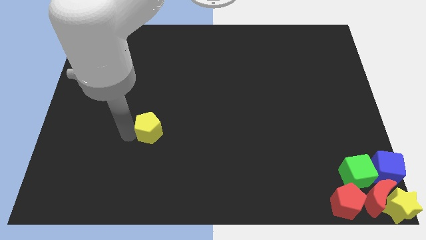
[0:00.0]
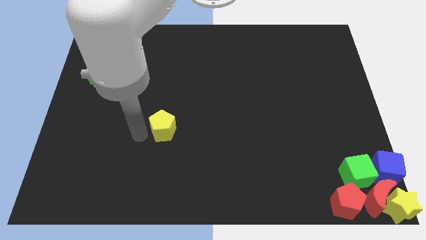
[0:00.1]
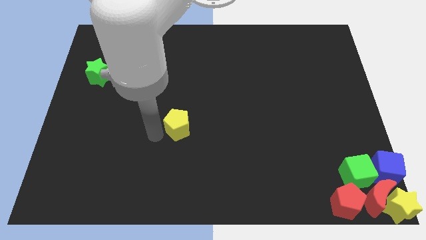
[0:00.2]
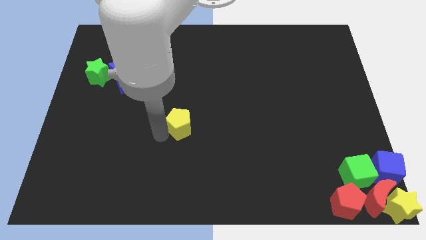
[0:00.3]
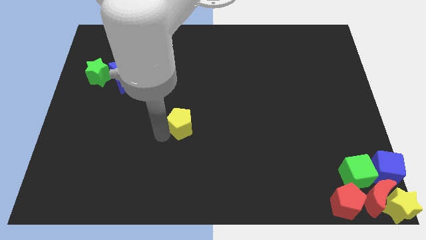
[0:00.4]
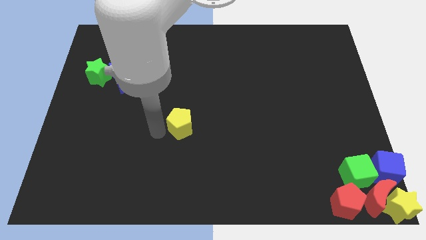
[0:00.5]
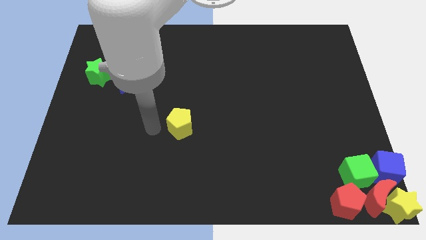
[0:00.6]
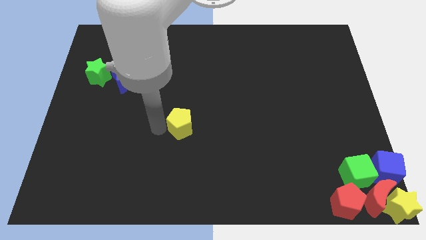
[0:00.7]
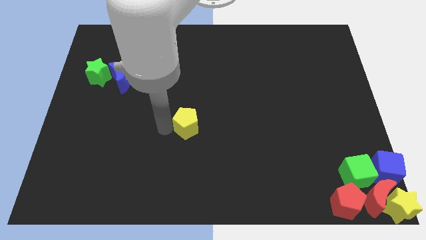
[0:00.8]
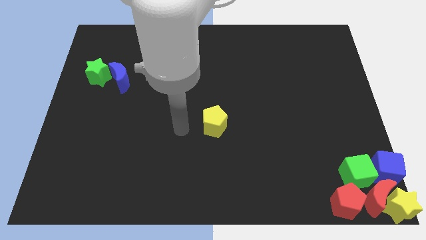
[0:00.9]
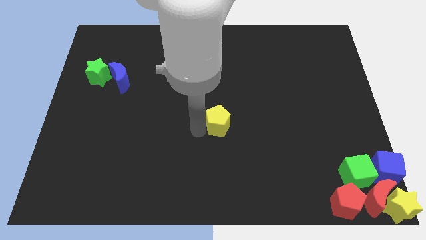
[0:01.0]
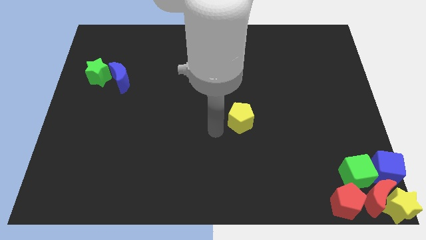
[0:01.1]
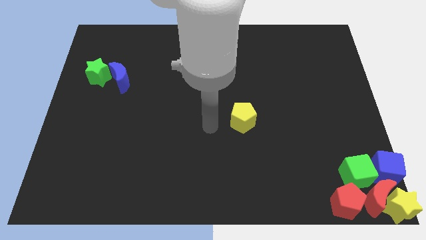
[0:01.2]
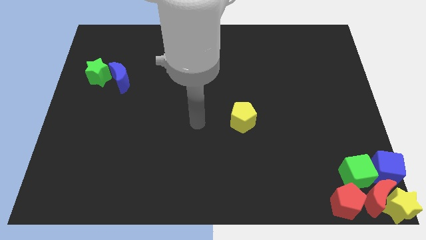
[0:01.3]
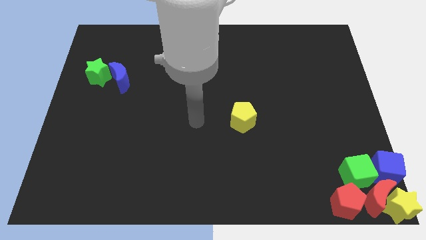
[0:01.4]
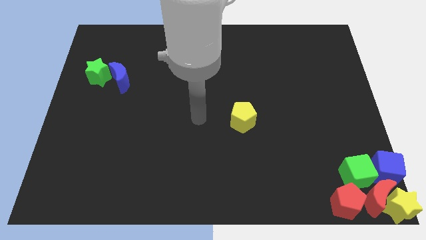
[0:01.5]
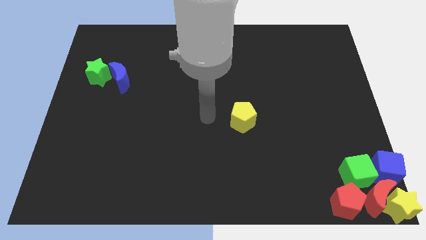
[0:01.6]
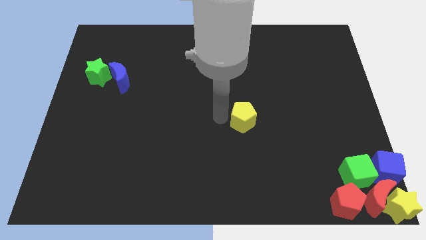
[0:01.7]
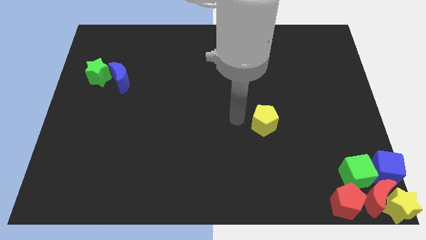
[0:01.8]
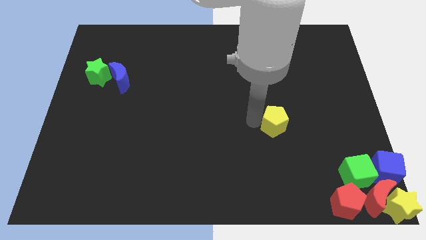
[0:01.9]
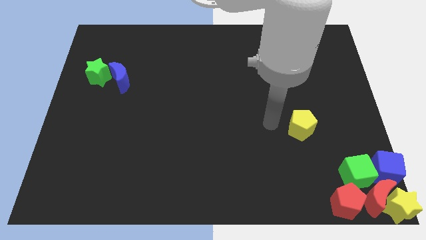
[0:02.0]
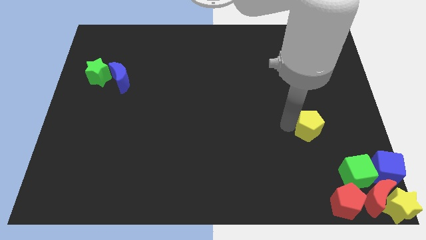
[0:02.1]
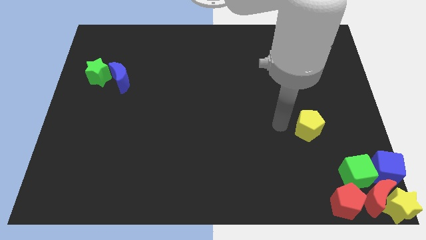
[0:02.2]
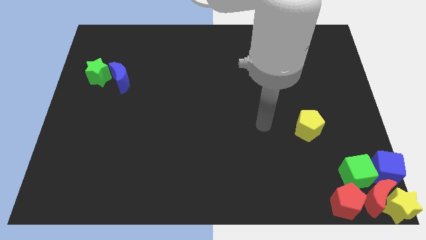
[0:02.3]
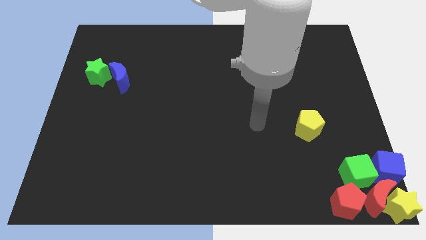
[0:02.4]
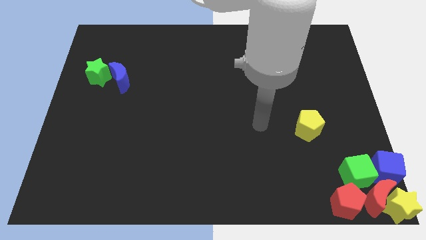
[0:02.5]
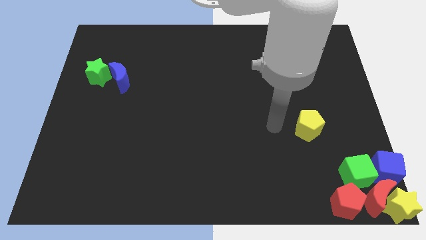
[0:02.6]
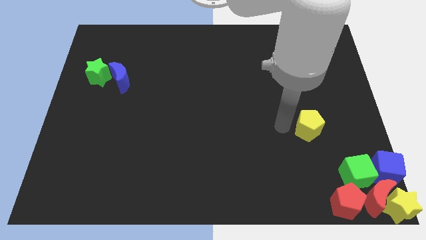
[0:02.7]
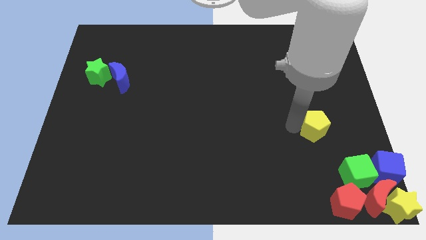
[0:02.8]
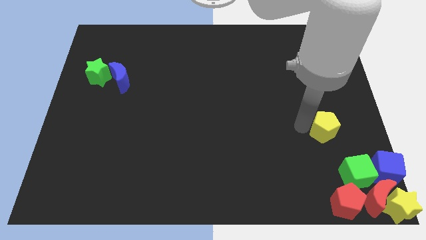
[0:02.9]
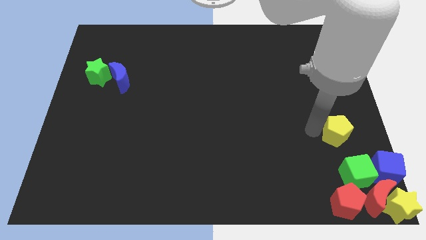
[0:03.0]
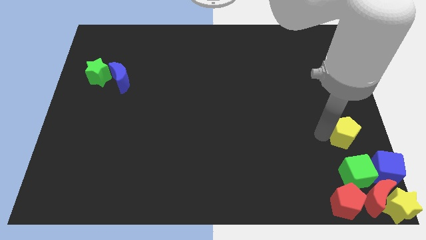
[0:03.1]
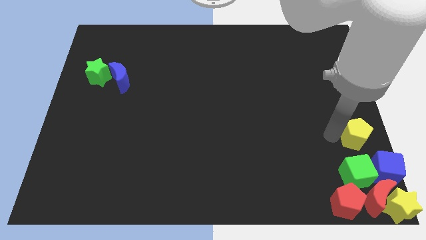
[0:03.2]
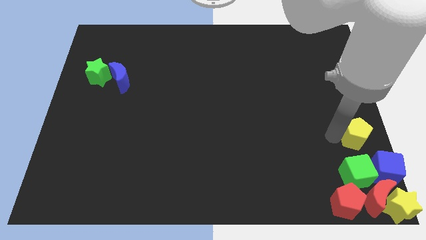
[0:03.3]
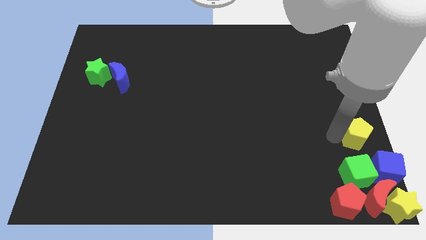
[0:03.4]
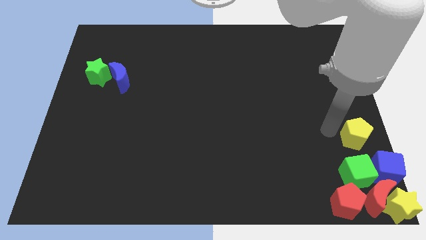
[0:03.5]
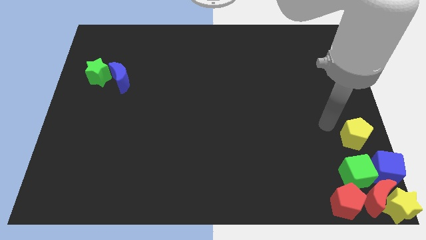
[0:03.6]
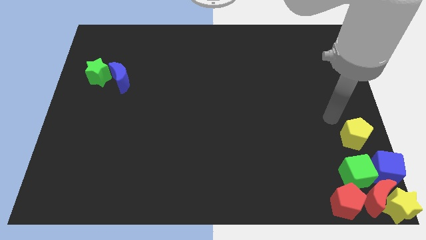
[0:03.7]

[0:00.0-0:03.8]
place the yellow pentagon above the green cube

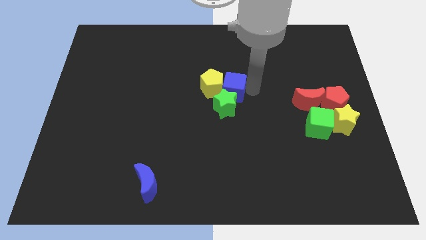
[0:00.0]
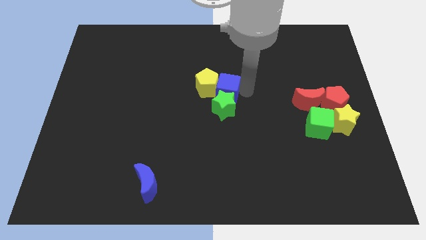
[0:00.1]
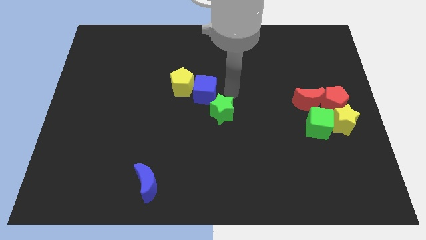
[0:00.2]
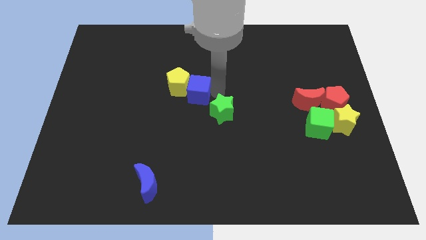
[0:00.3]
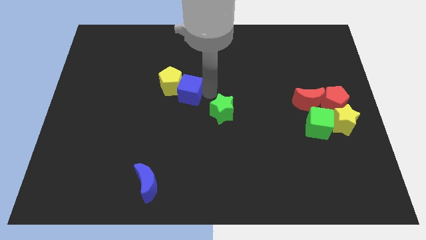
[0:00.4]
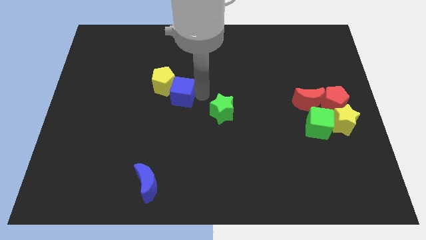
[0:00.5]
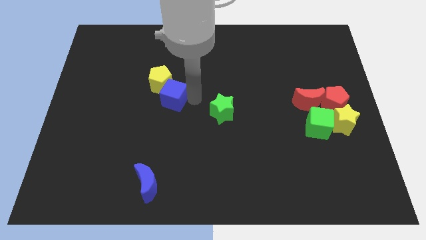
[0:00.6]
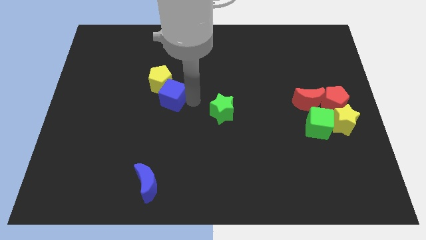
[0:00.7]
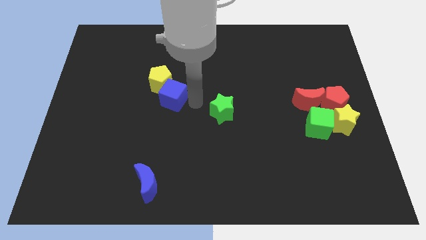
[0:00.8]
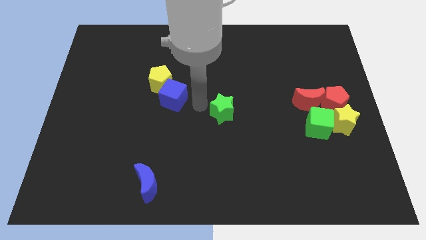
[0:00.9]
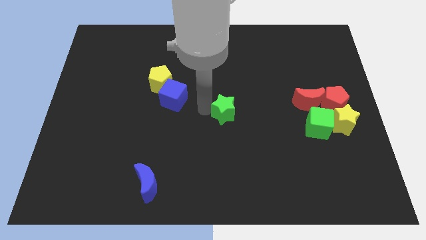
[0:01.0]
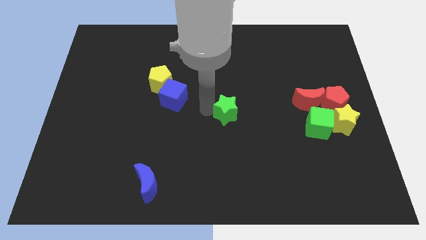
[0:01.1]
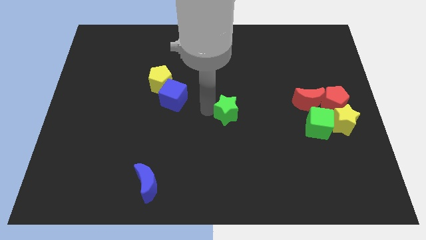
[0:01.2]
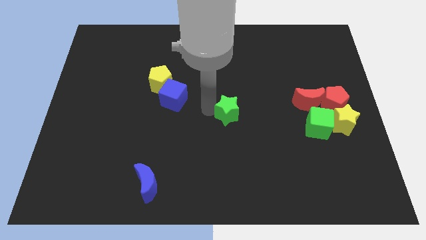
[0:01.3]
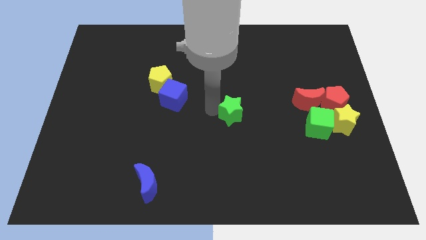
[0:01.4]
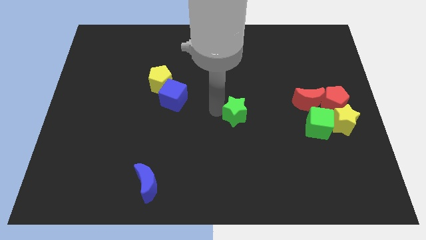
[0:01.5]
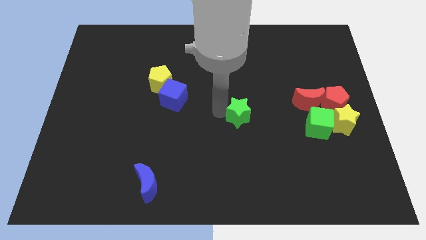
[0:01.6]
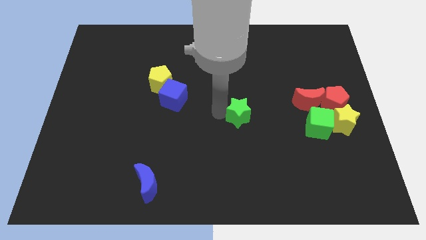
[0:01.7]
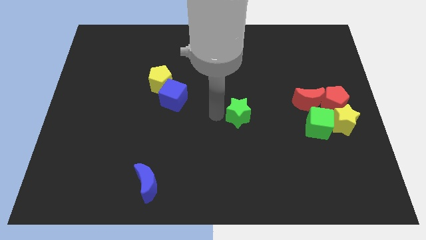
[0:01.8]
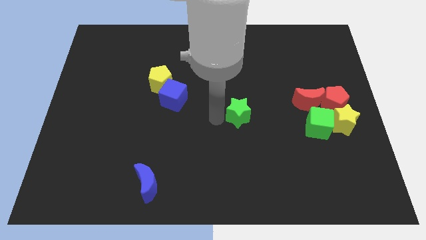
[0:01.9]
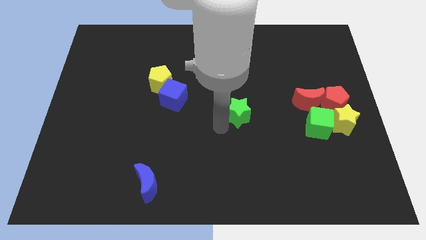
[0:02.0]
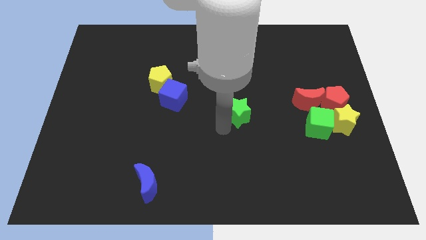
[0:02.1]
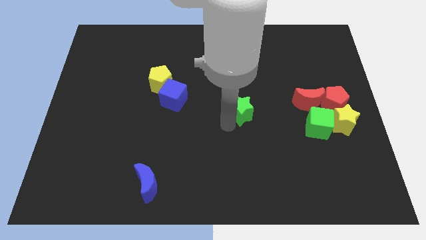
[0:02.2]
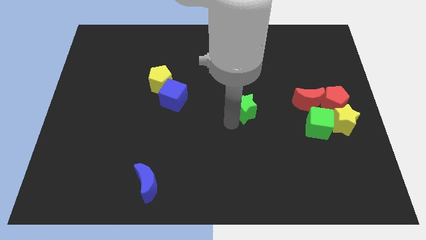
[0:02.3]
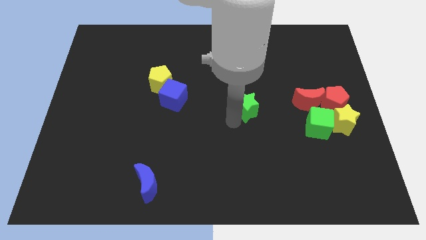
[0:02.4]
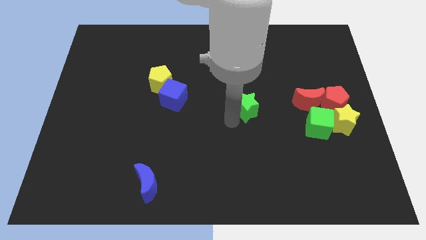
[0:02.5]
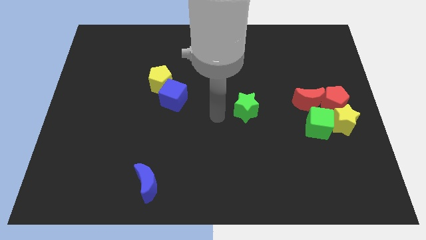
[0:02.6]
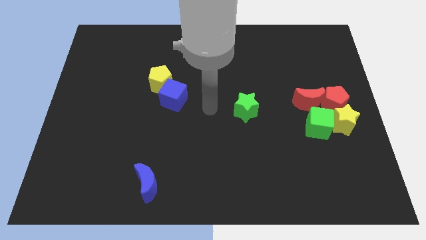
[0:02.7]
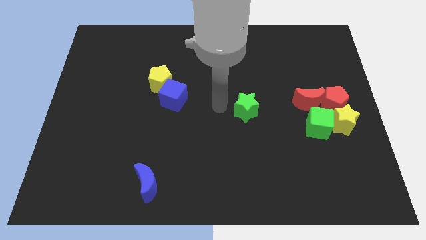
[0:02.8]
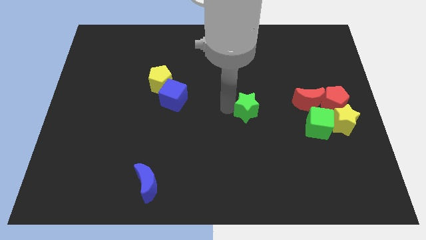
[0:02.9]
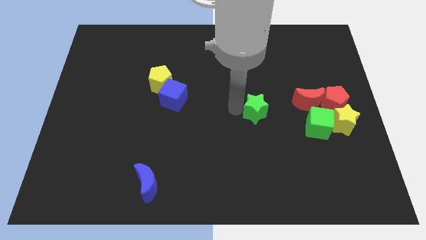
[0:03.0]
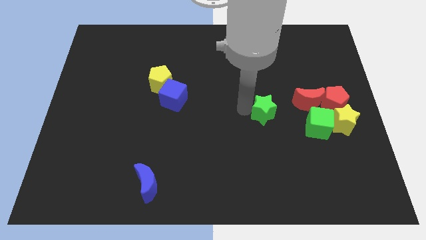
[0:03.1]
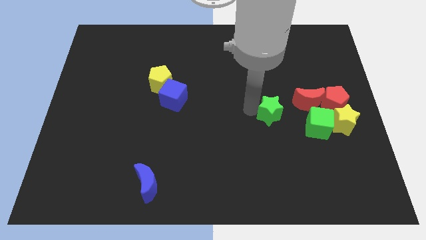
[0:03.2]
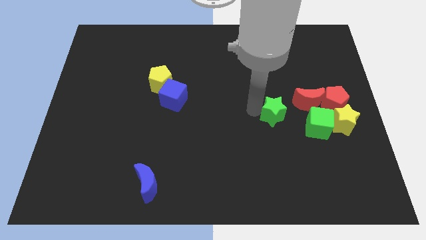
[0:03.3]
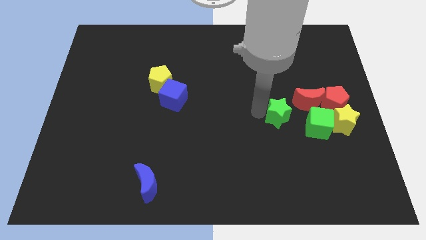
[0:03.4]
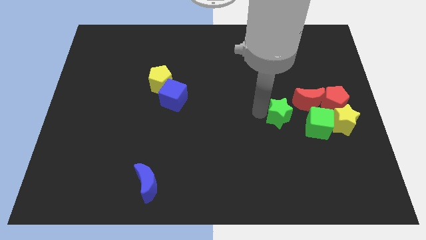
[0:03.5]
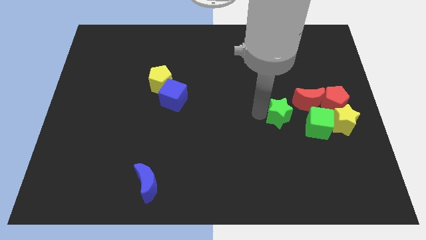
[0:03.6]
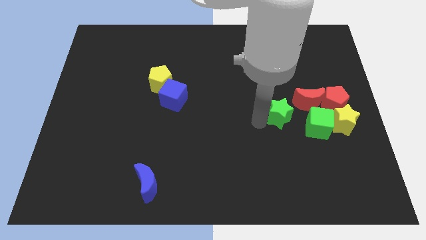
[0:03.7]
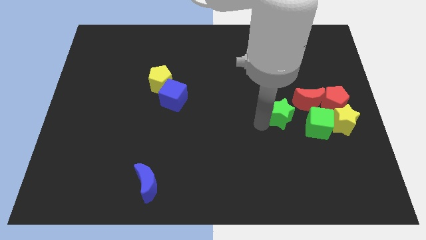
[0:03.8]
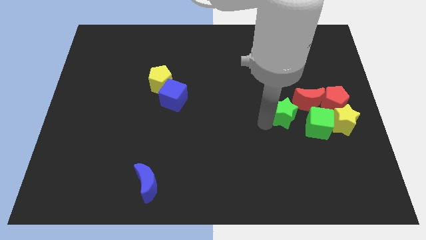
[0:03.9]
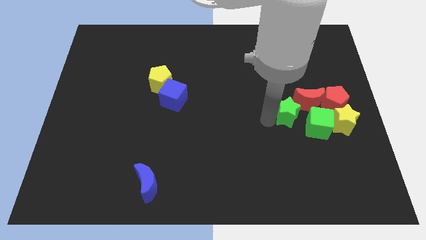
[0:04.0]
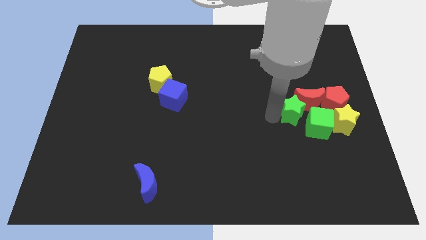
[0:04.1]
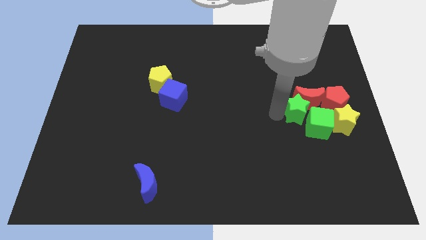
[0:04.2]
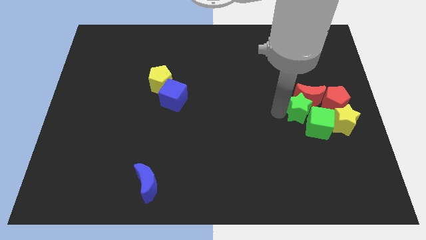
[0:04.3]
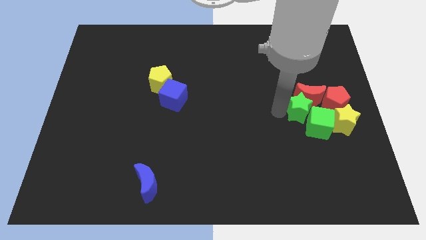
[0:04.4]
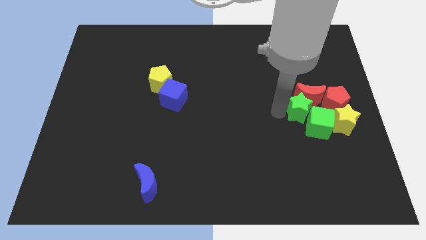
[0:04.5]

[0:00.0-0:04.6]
separate the green star from the blue cube and the yellow pentagon

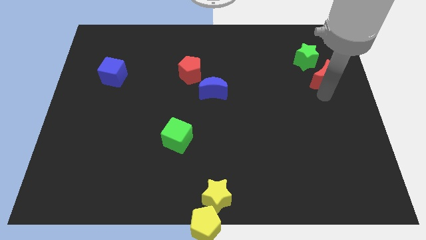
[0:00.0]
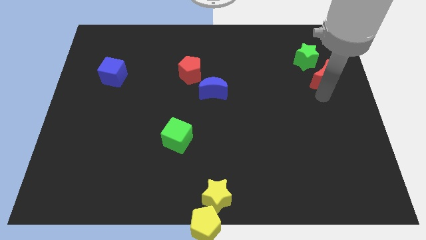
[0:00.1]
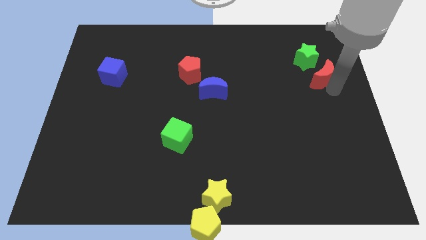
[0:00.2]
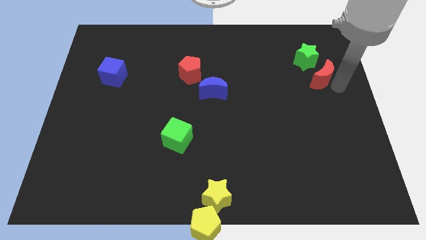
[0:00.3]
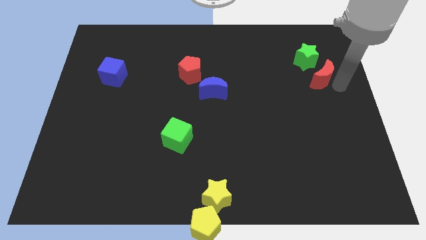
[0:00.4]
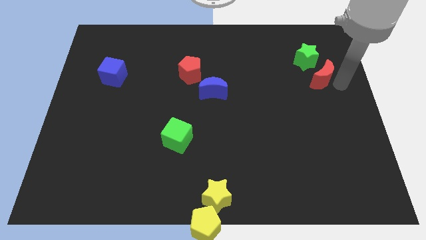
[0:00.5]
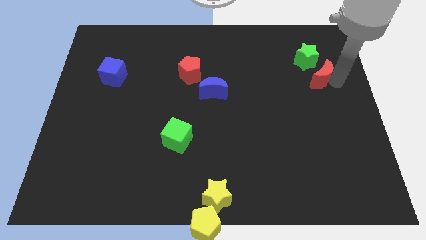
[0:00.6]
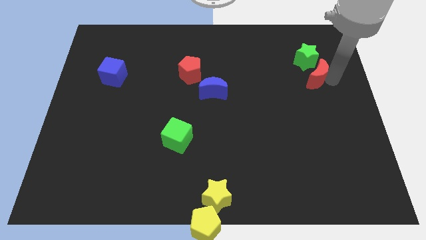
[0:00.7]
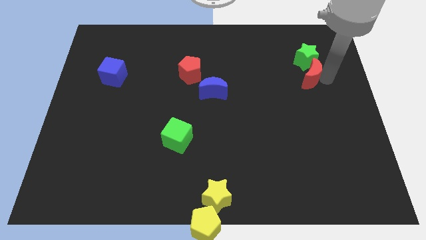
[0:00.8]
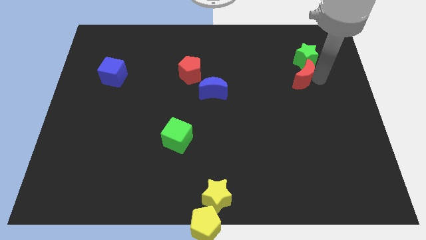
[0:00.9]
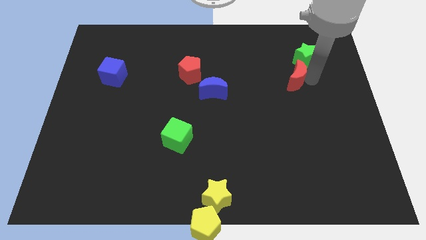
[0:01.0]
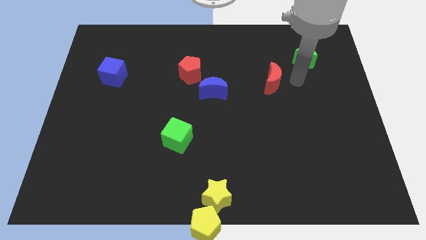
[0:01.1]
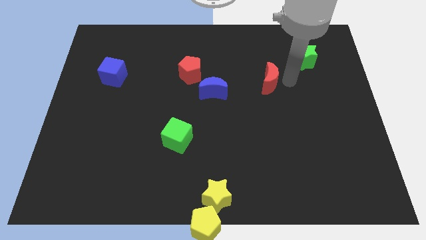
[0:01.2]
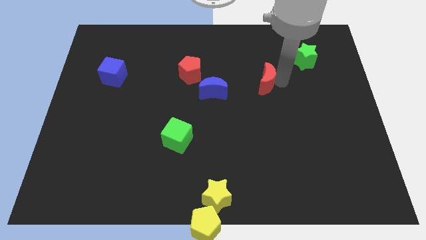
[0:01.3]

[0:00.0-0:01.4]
push red crescent to its left
